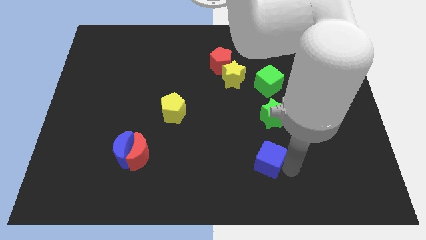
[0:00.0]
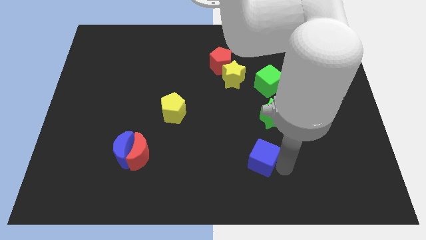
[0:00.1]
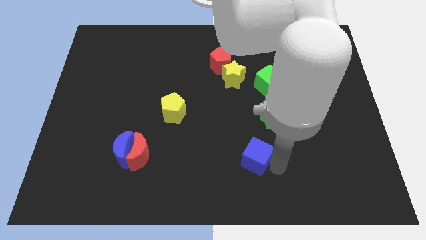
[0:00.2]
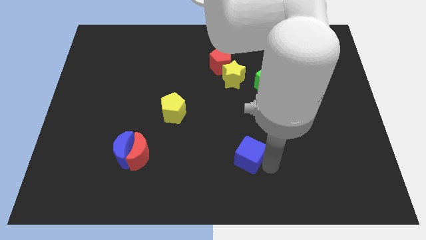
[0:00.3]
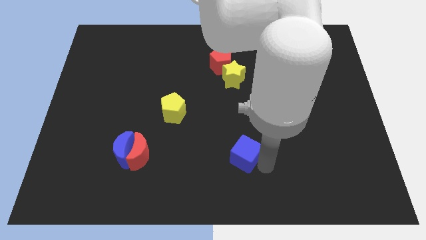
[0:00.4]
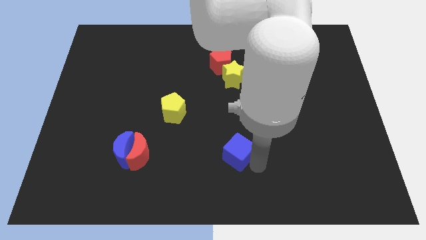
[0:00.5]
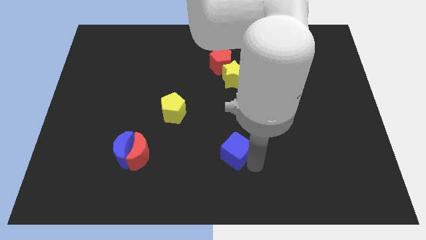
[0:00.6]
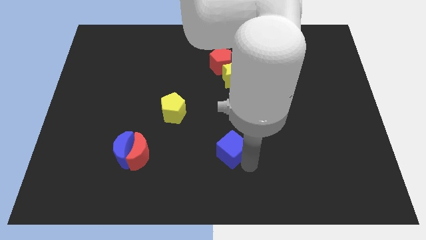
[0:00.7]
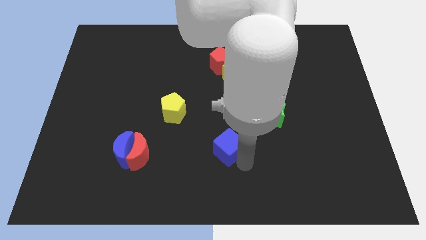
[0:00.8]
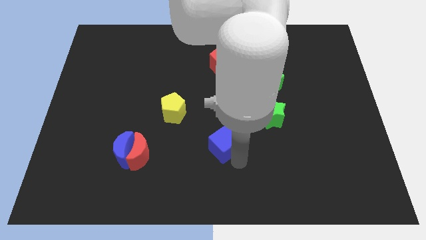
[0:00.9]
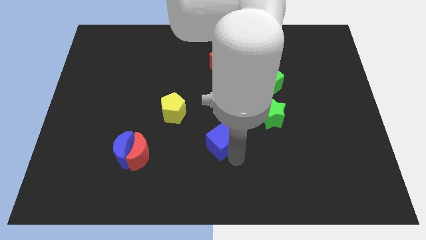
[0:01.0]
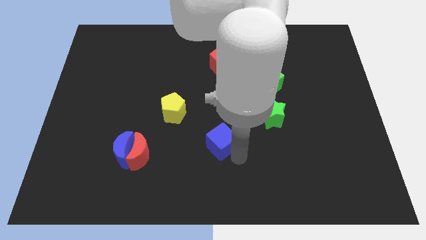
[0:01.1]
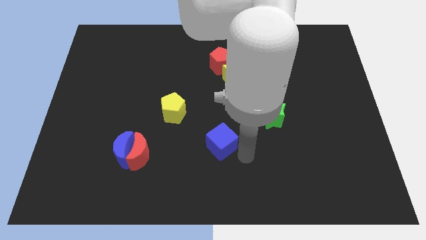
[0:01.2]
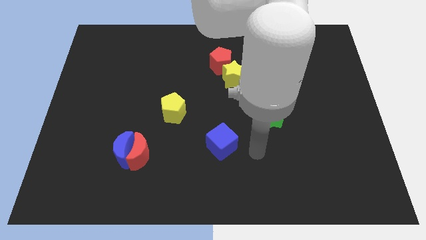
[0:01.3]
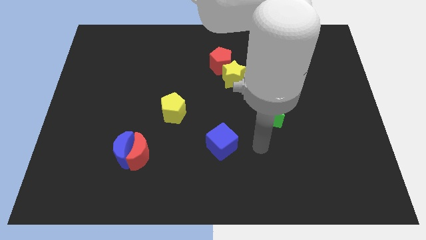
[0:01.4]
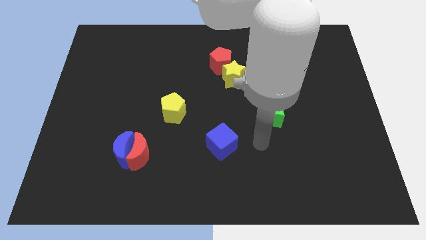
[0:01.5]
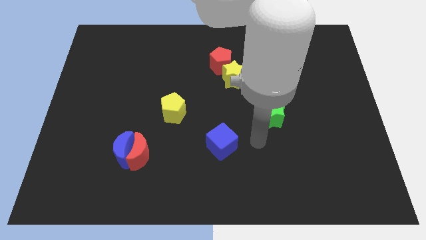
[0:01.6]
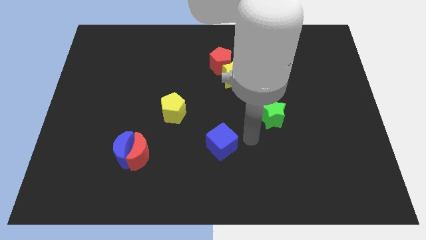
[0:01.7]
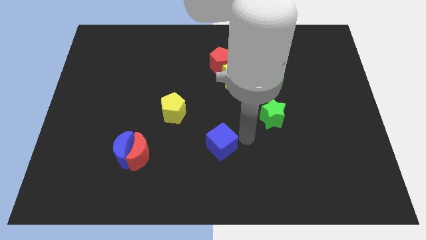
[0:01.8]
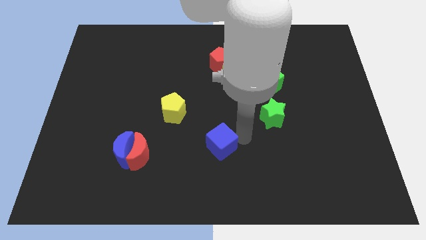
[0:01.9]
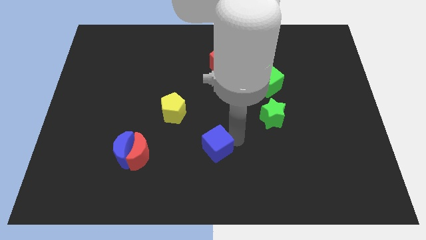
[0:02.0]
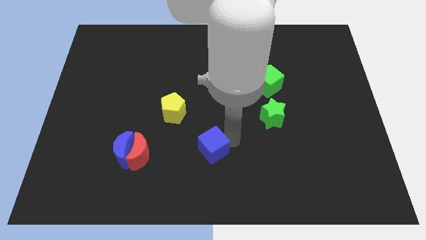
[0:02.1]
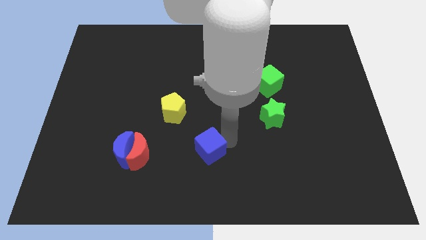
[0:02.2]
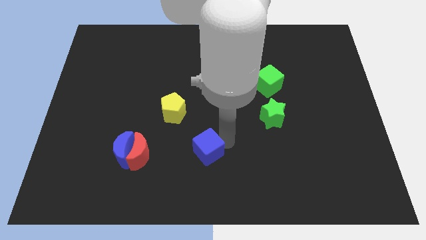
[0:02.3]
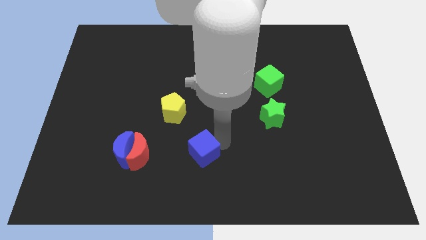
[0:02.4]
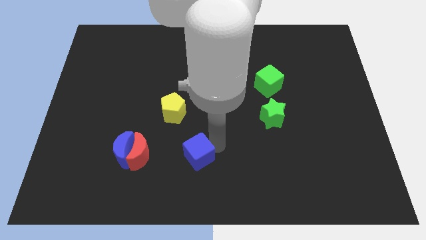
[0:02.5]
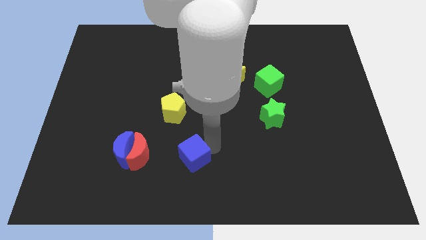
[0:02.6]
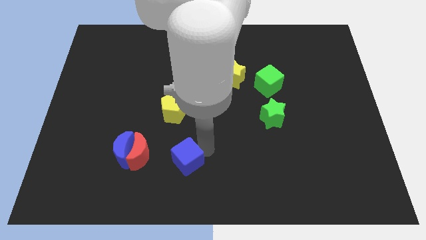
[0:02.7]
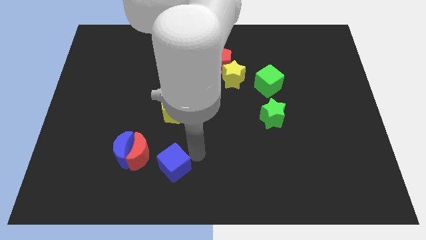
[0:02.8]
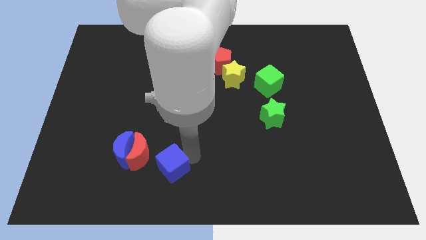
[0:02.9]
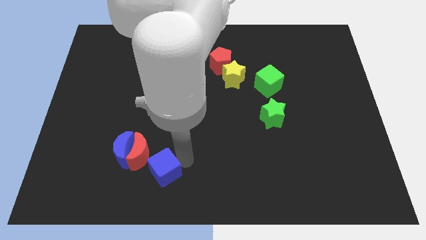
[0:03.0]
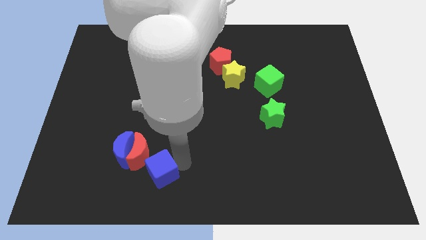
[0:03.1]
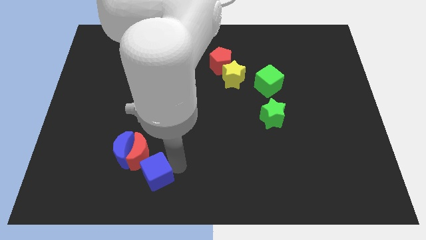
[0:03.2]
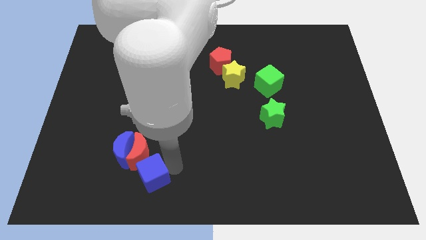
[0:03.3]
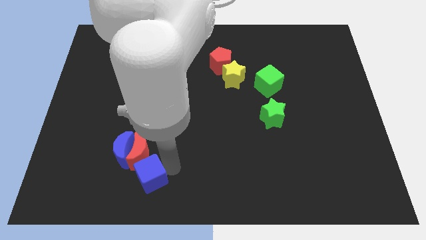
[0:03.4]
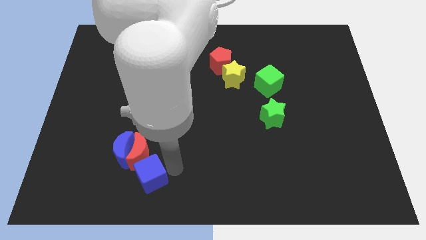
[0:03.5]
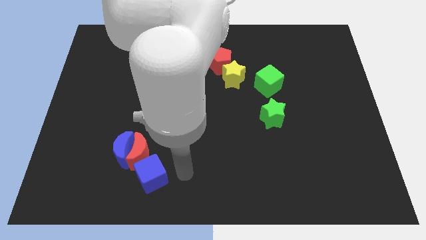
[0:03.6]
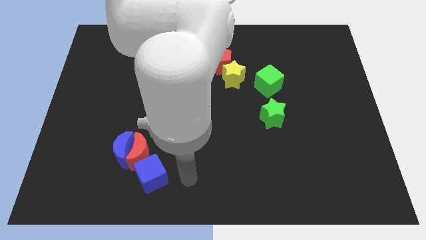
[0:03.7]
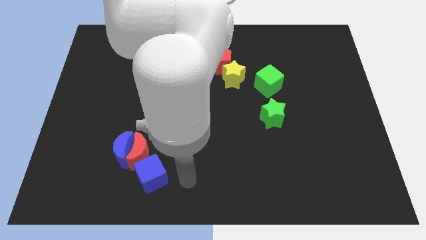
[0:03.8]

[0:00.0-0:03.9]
put the blue cube bottom right to the red crescent

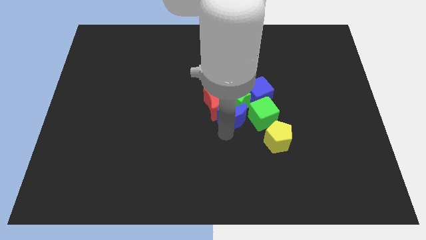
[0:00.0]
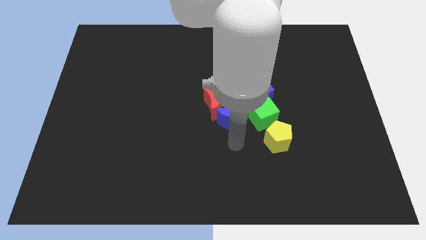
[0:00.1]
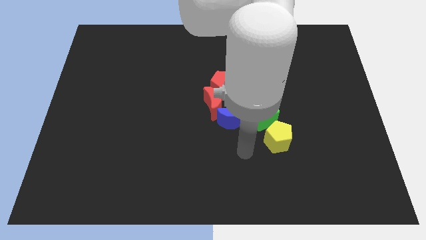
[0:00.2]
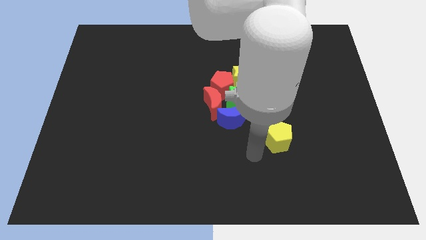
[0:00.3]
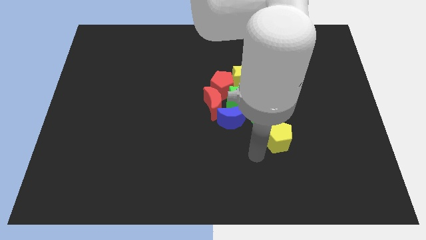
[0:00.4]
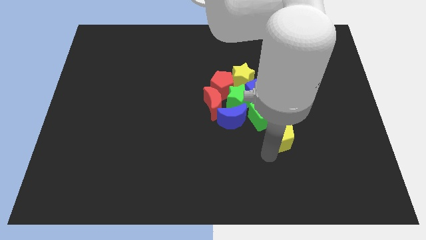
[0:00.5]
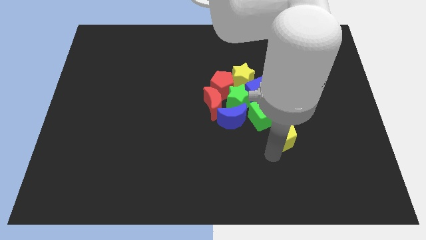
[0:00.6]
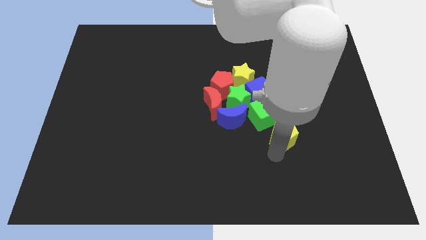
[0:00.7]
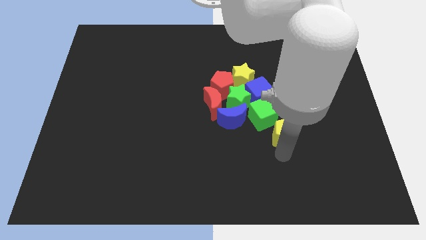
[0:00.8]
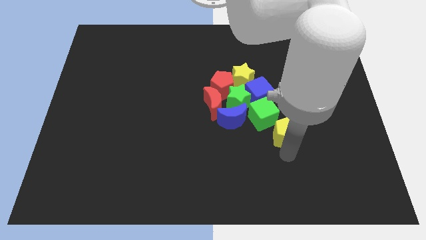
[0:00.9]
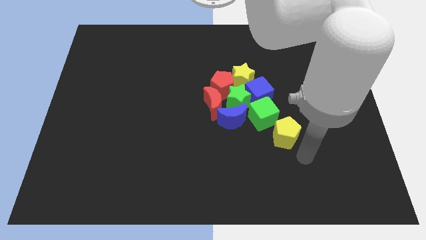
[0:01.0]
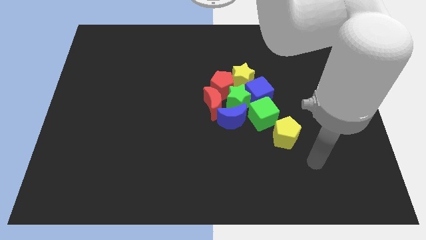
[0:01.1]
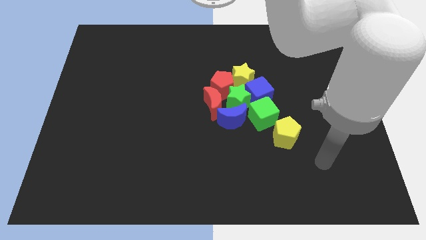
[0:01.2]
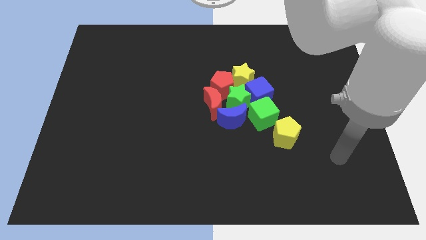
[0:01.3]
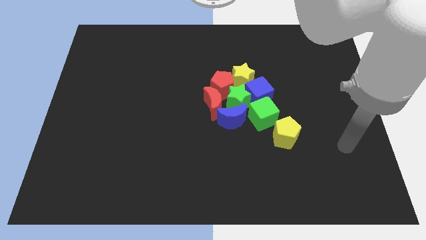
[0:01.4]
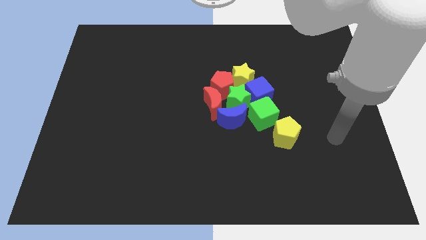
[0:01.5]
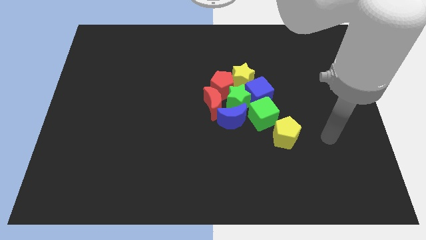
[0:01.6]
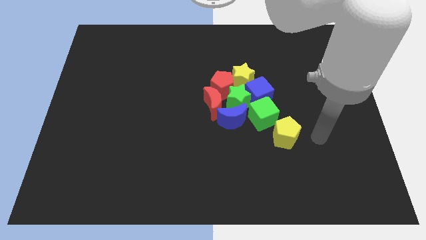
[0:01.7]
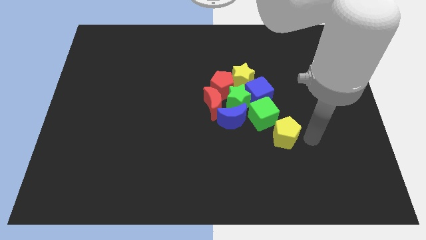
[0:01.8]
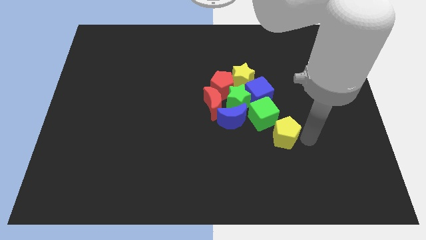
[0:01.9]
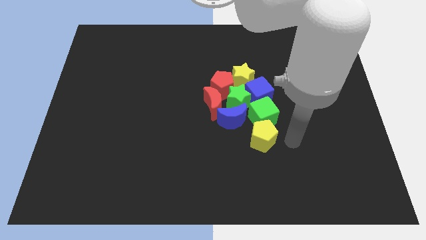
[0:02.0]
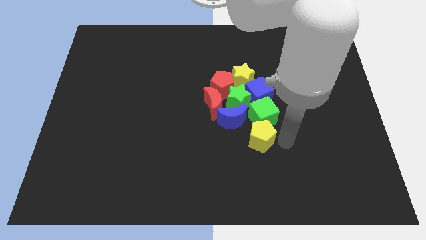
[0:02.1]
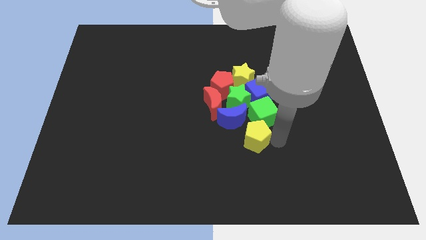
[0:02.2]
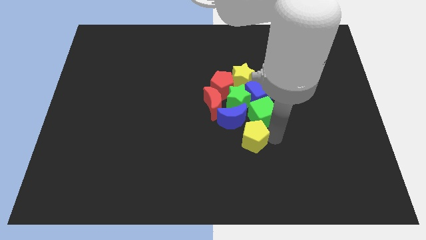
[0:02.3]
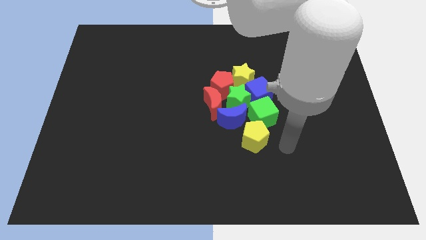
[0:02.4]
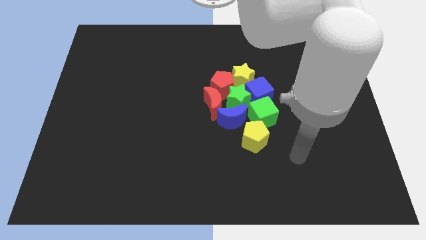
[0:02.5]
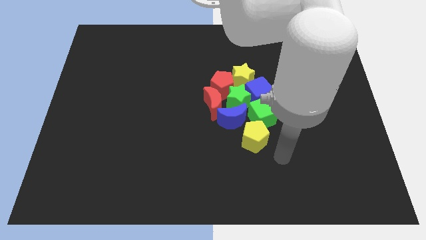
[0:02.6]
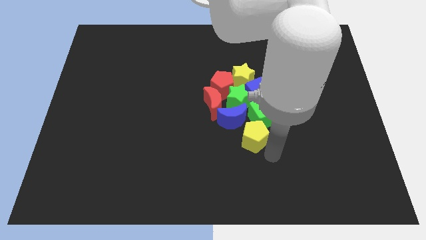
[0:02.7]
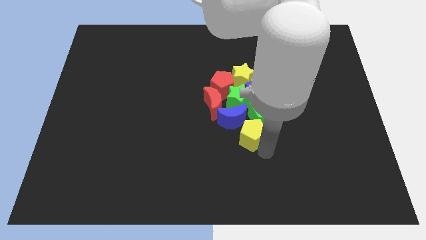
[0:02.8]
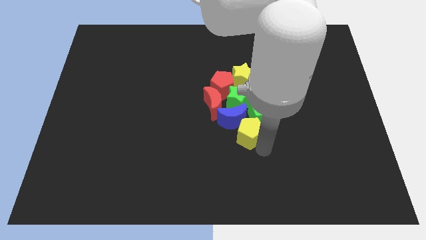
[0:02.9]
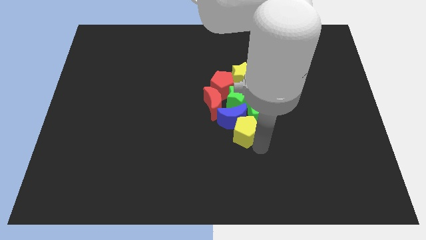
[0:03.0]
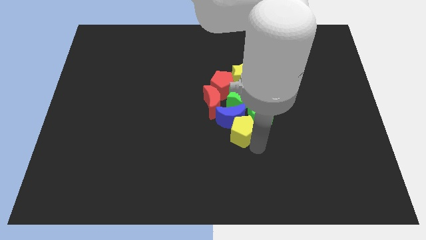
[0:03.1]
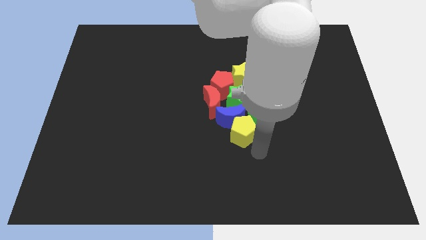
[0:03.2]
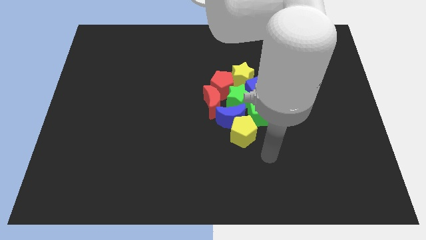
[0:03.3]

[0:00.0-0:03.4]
place the yellow pentagon close to the group of blocks

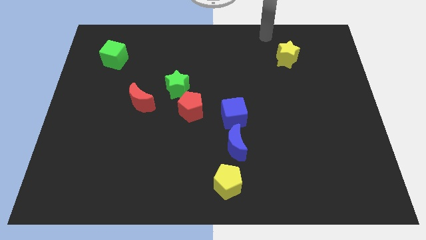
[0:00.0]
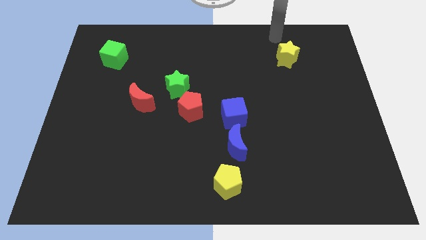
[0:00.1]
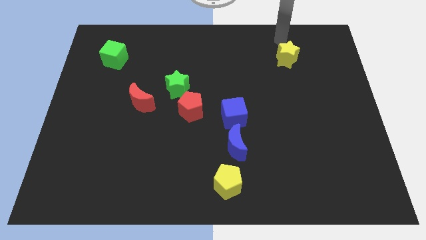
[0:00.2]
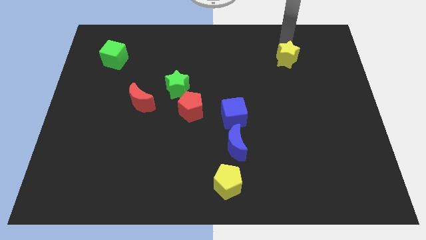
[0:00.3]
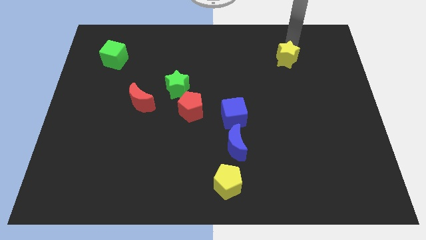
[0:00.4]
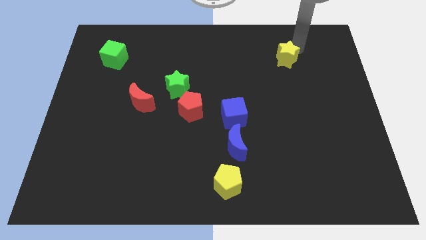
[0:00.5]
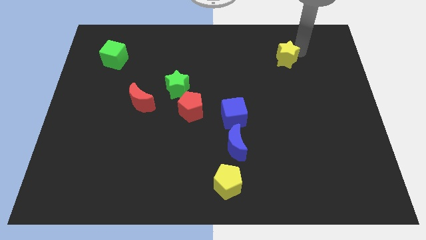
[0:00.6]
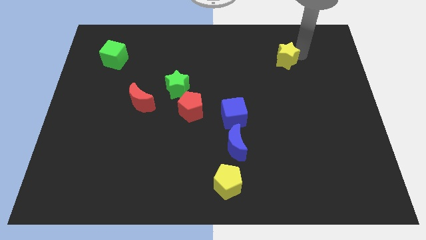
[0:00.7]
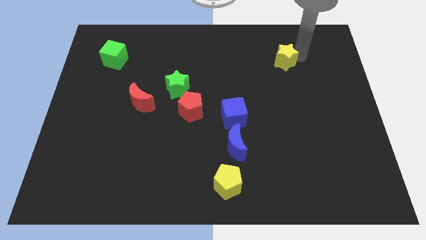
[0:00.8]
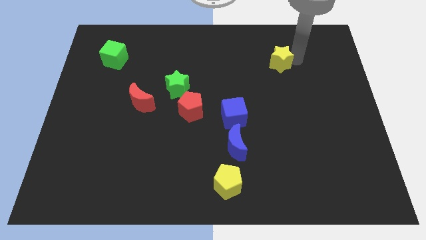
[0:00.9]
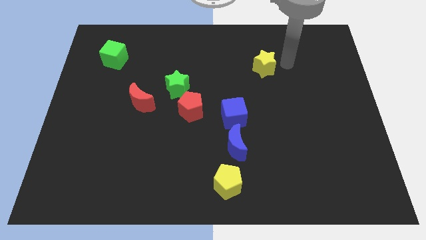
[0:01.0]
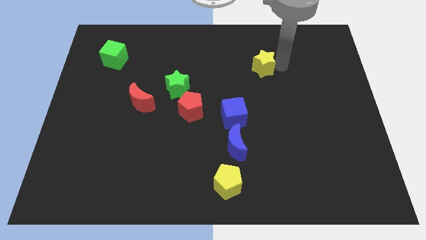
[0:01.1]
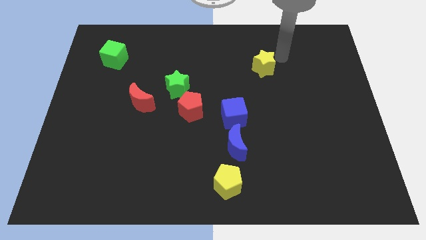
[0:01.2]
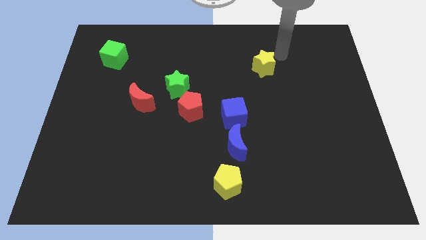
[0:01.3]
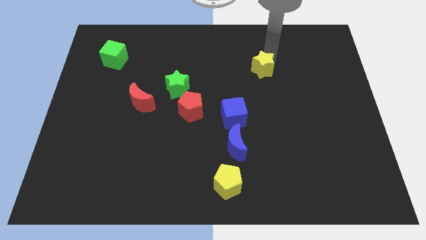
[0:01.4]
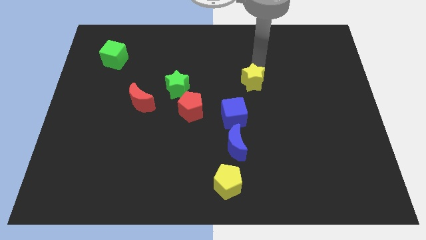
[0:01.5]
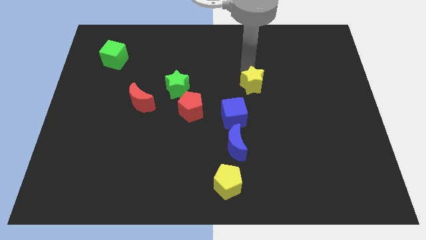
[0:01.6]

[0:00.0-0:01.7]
move the yellow star towards the blue cube
